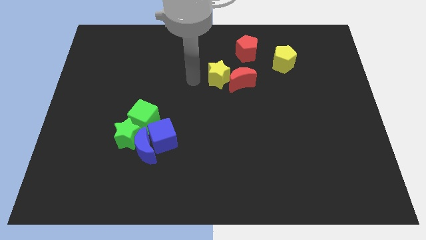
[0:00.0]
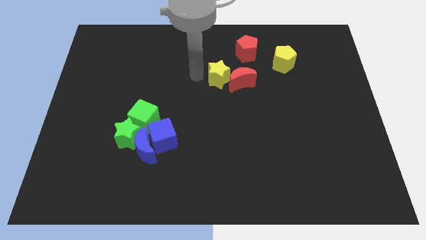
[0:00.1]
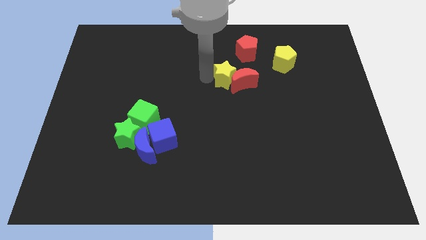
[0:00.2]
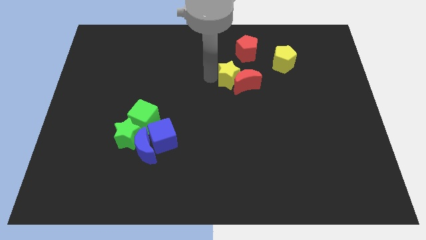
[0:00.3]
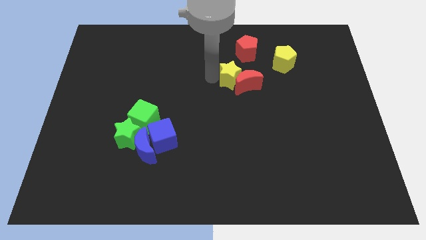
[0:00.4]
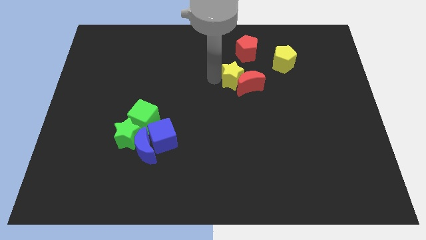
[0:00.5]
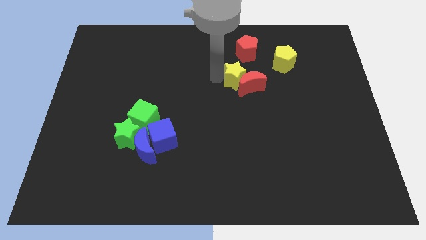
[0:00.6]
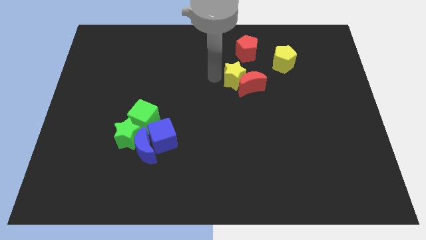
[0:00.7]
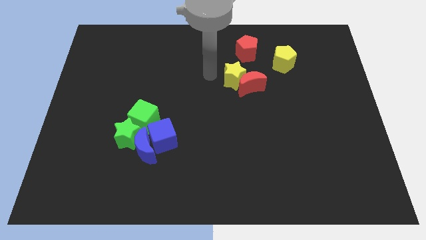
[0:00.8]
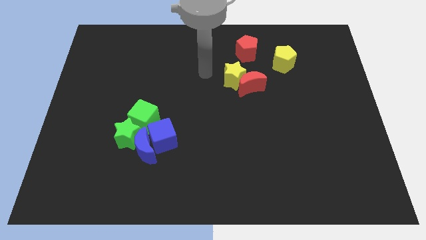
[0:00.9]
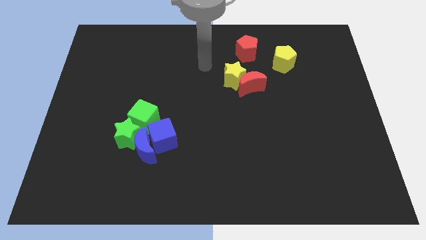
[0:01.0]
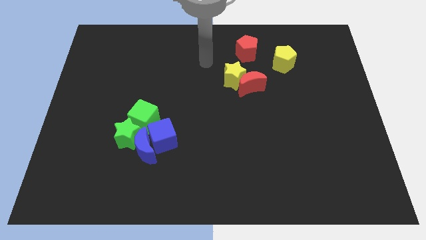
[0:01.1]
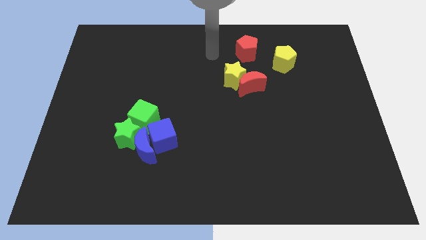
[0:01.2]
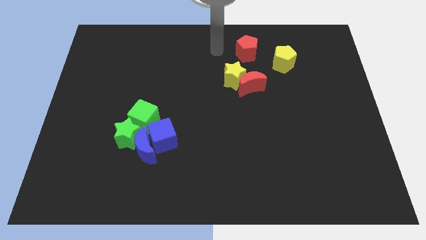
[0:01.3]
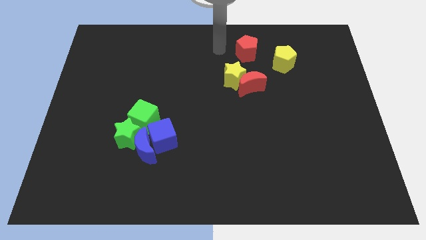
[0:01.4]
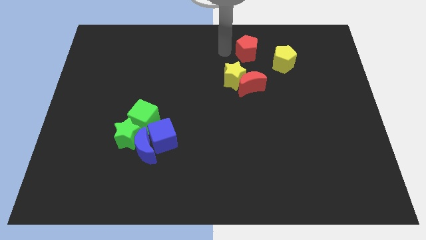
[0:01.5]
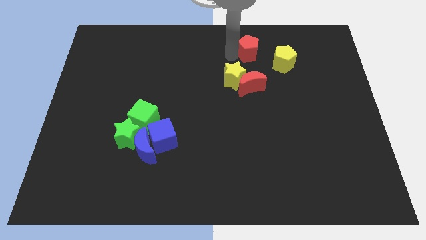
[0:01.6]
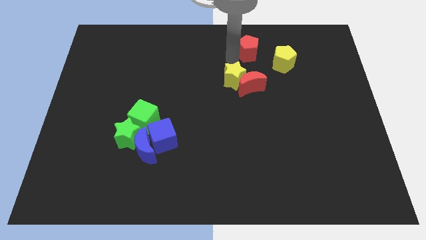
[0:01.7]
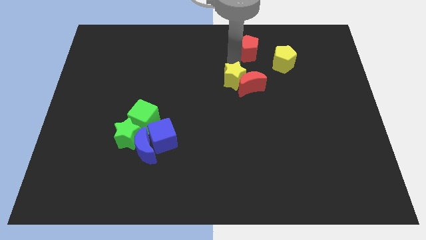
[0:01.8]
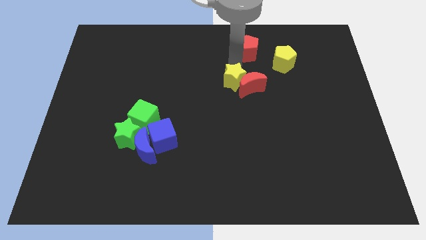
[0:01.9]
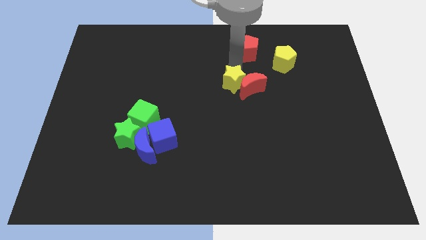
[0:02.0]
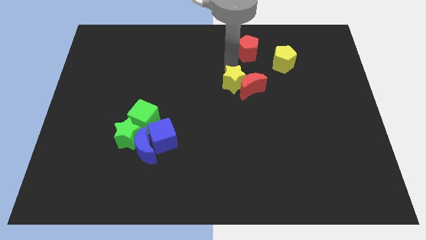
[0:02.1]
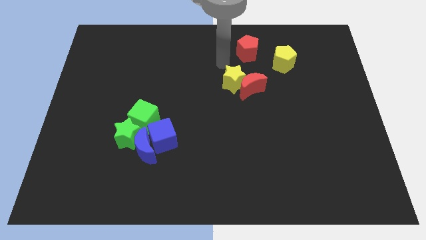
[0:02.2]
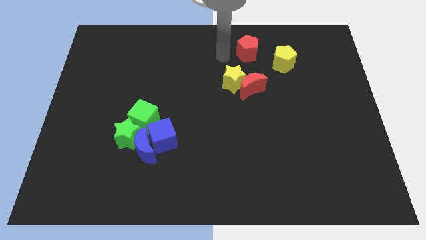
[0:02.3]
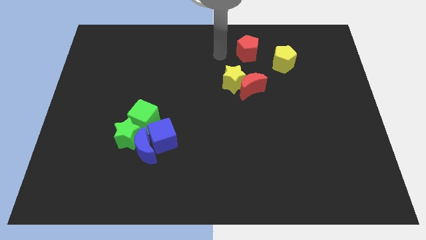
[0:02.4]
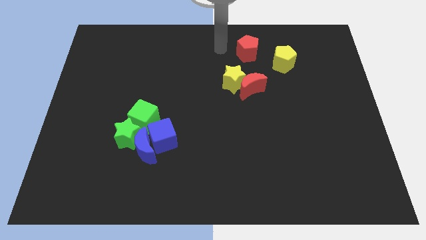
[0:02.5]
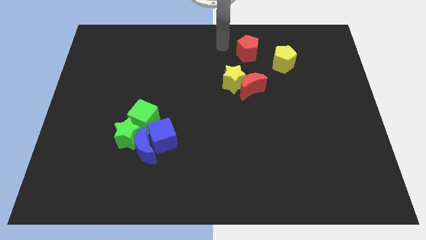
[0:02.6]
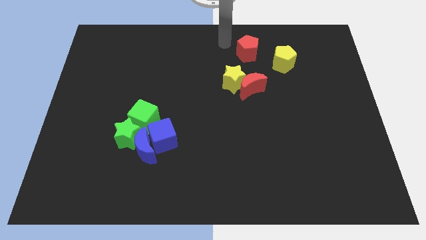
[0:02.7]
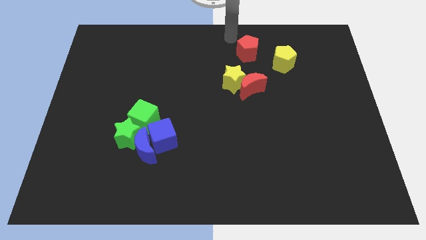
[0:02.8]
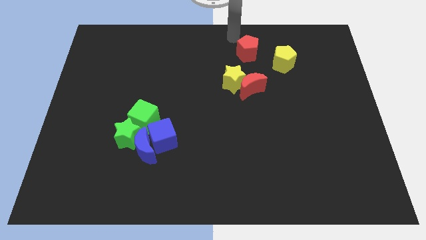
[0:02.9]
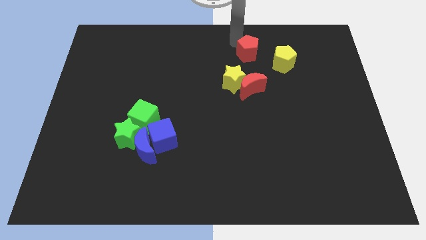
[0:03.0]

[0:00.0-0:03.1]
move yellow star along with the red crescent to the bottom of red pentagon

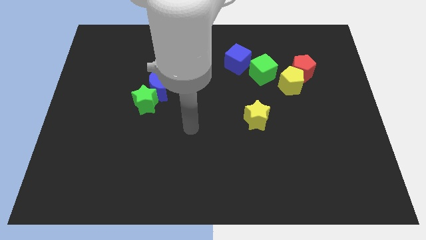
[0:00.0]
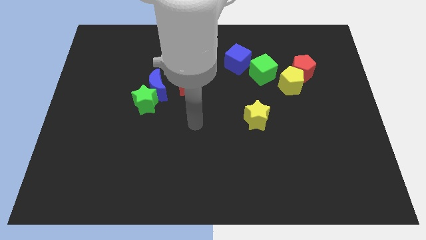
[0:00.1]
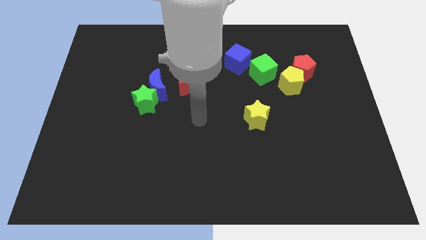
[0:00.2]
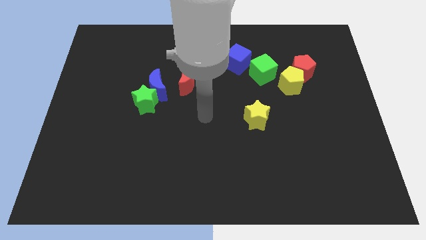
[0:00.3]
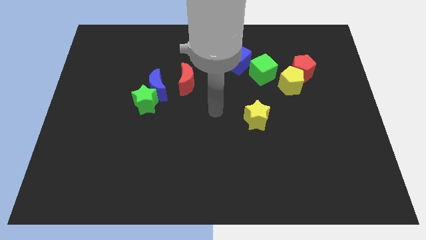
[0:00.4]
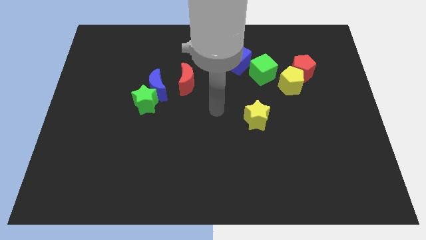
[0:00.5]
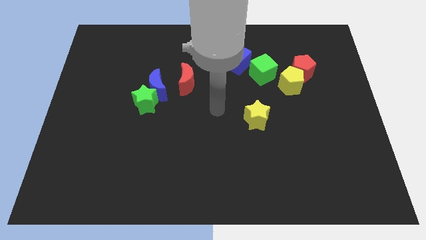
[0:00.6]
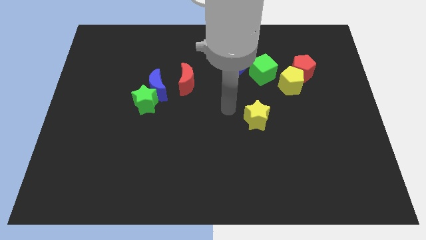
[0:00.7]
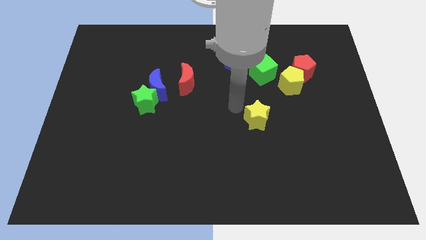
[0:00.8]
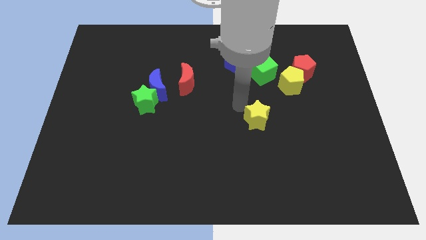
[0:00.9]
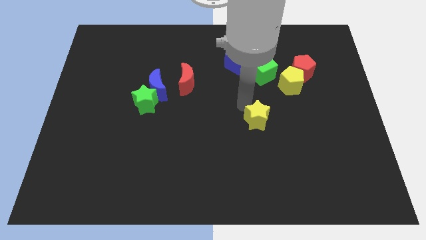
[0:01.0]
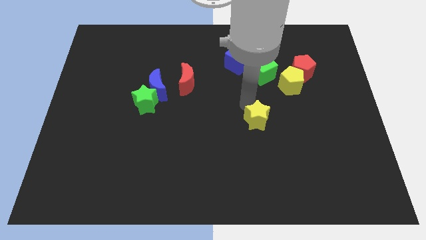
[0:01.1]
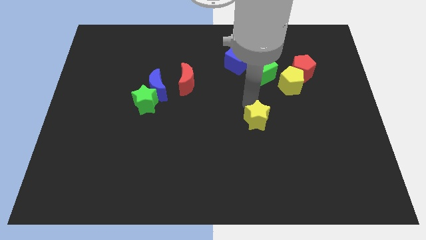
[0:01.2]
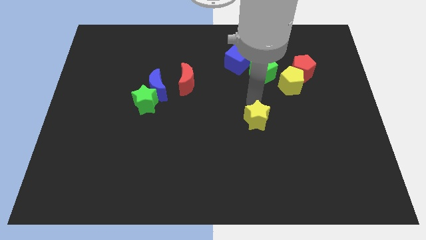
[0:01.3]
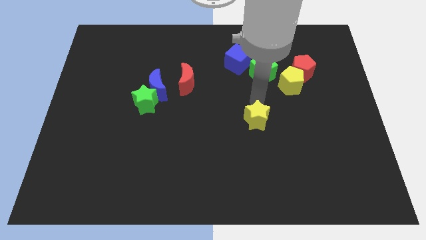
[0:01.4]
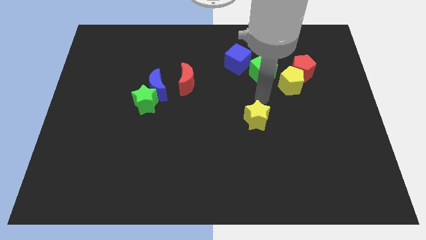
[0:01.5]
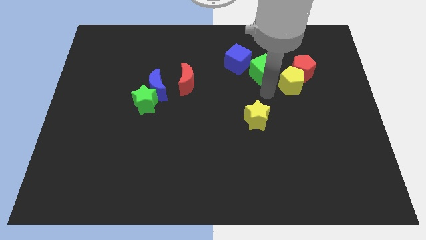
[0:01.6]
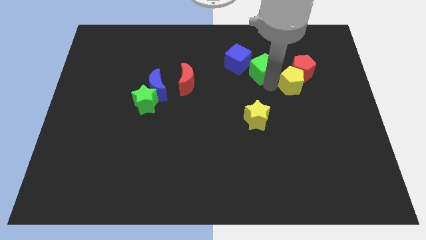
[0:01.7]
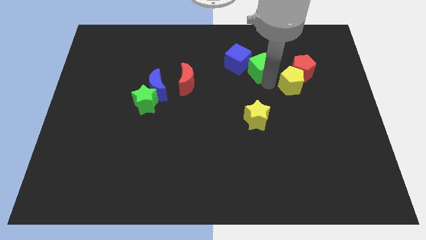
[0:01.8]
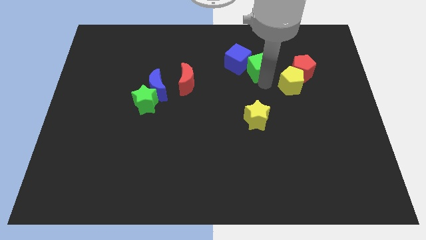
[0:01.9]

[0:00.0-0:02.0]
move the arm to the green cube

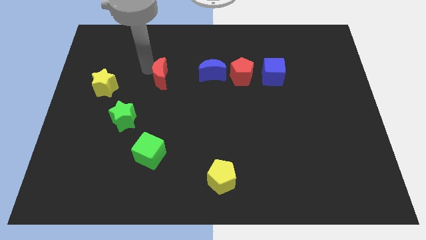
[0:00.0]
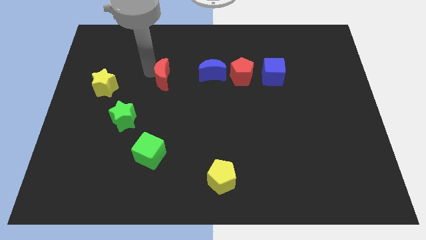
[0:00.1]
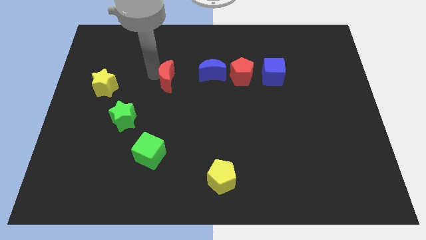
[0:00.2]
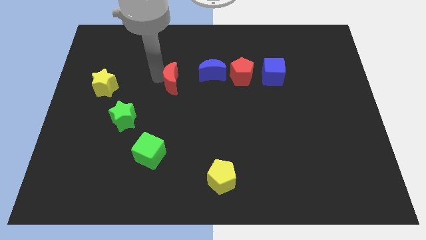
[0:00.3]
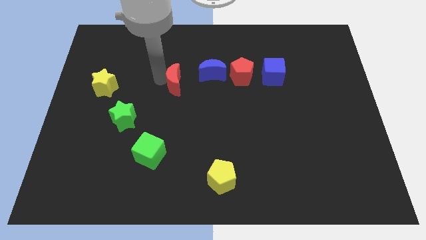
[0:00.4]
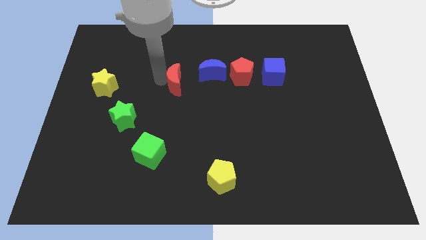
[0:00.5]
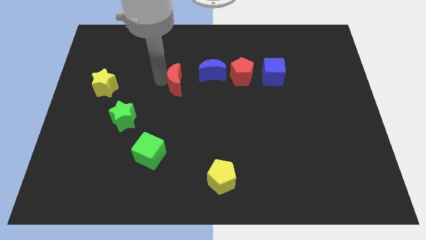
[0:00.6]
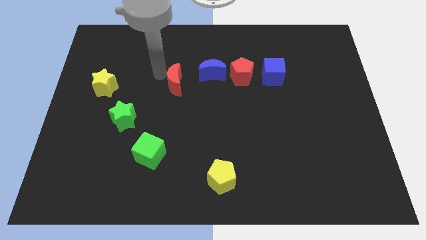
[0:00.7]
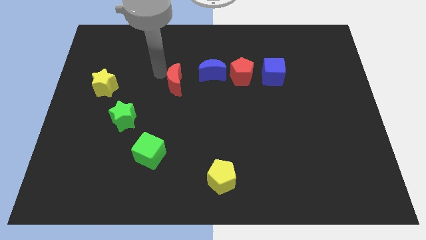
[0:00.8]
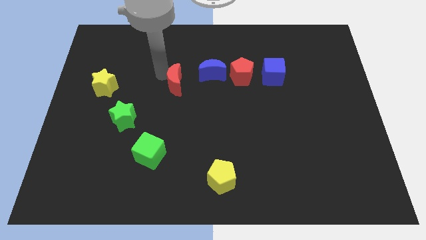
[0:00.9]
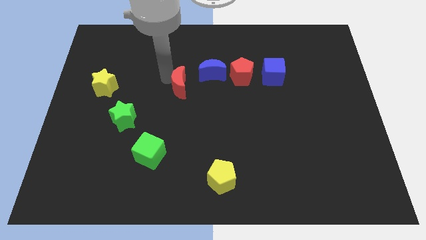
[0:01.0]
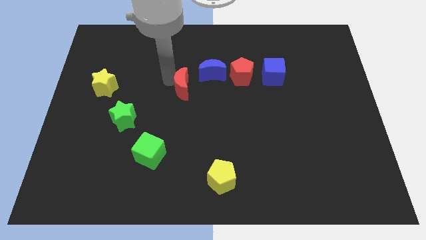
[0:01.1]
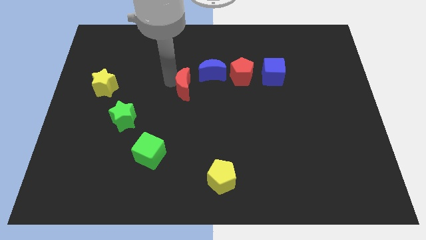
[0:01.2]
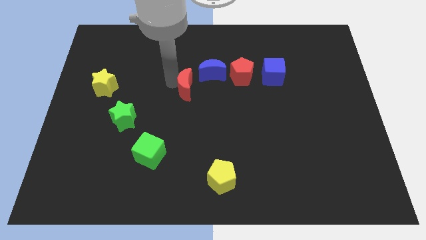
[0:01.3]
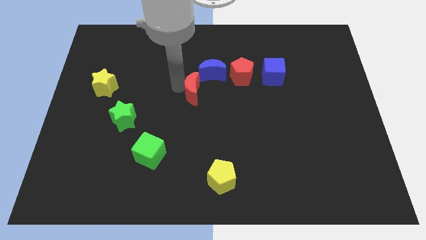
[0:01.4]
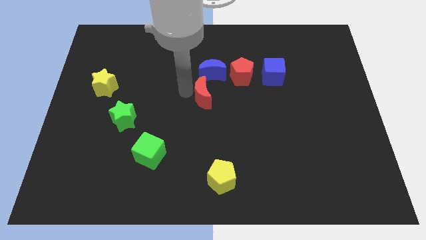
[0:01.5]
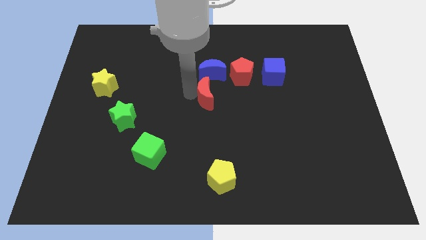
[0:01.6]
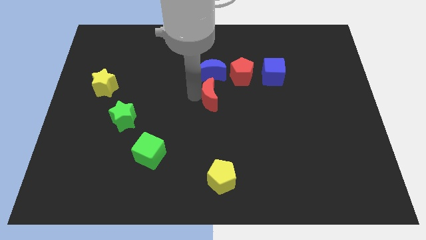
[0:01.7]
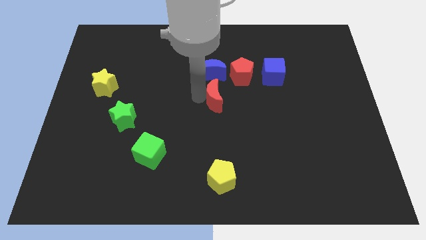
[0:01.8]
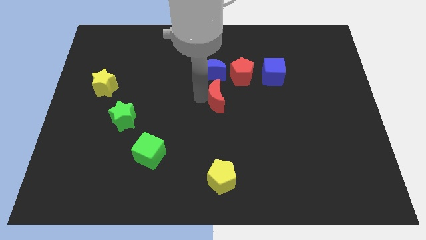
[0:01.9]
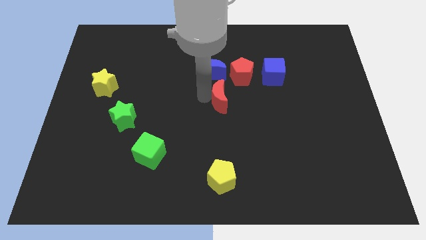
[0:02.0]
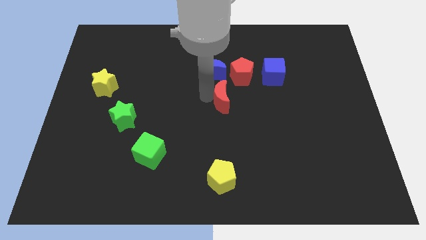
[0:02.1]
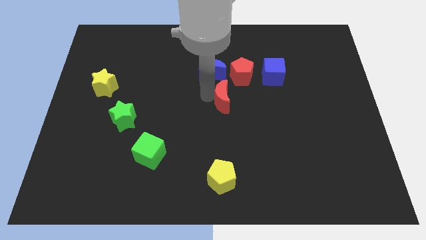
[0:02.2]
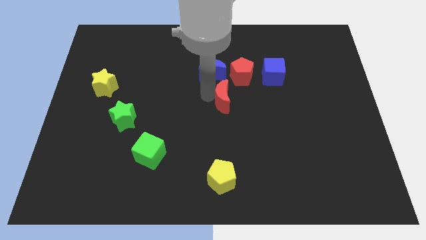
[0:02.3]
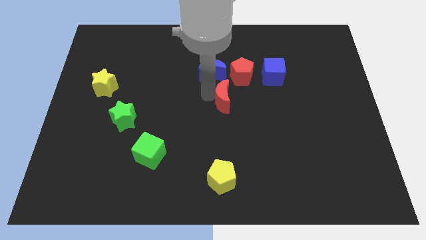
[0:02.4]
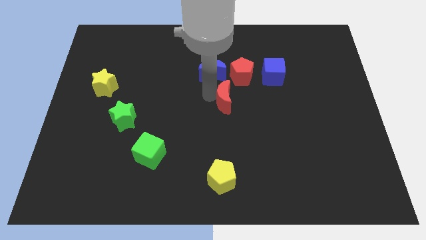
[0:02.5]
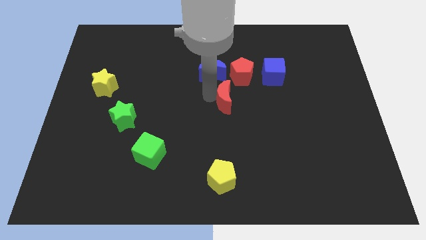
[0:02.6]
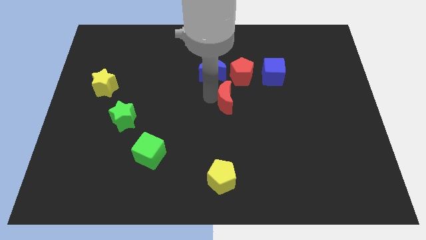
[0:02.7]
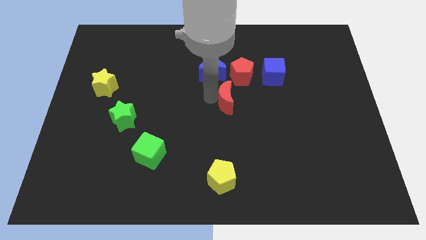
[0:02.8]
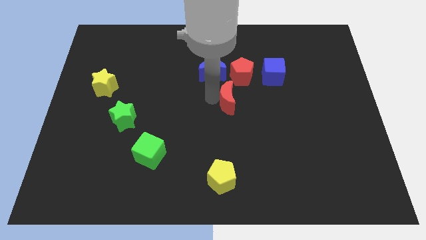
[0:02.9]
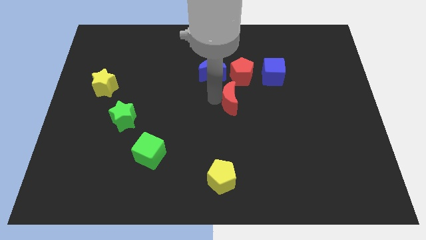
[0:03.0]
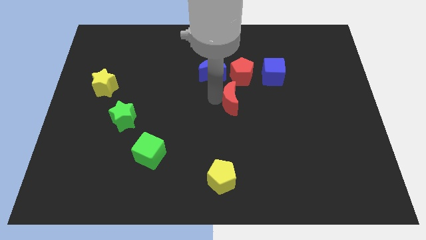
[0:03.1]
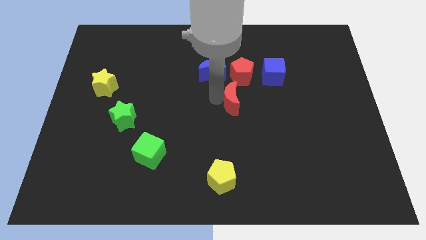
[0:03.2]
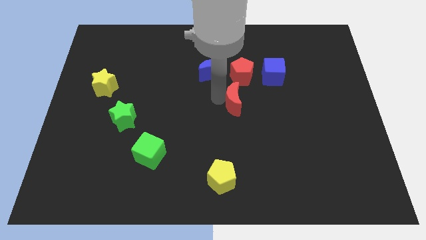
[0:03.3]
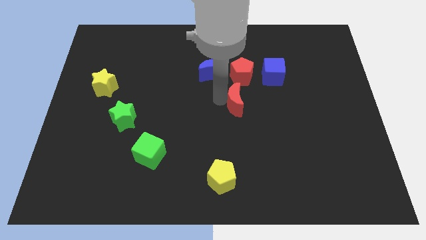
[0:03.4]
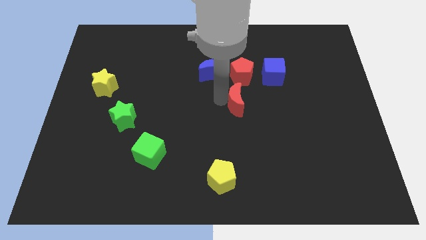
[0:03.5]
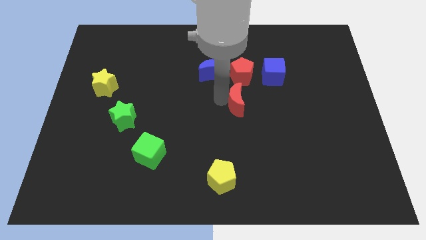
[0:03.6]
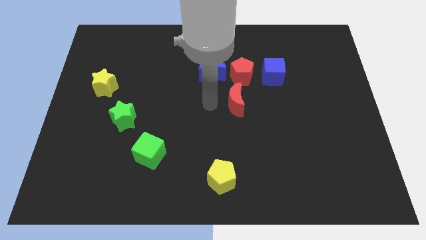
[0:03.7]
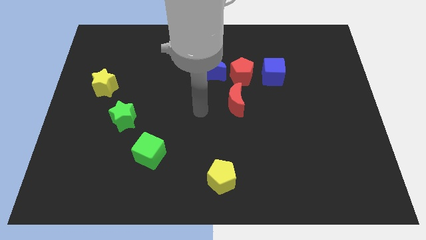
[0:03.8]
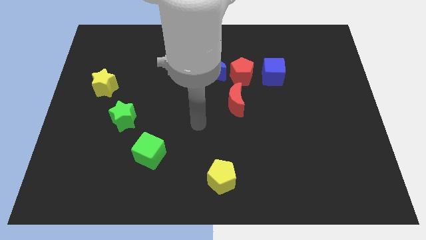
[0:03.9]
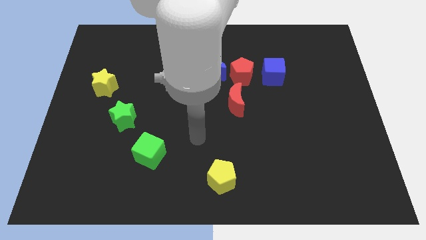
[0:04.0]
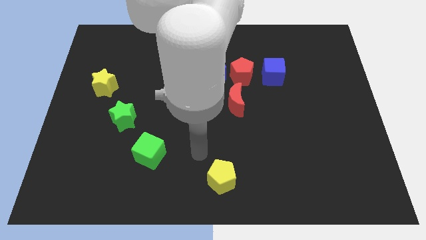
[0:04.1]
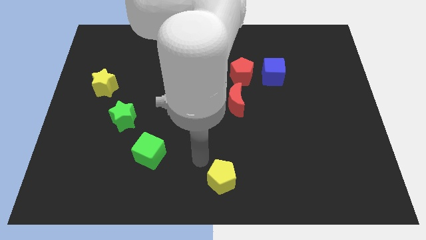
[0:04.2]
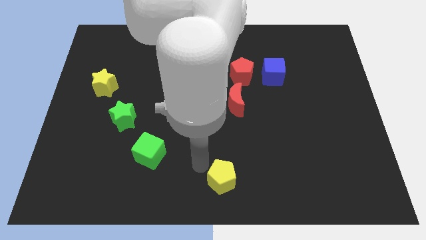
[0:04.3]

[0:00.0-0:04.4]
move the red crescent to the right of the board
